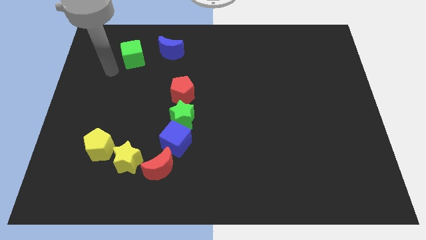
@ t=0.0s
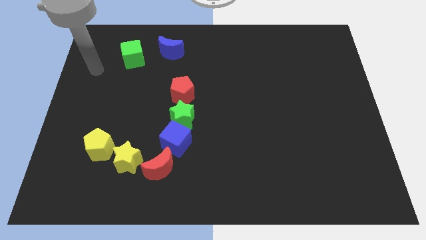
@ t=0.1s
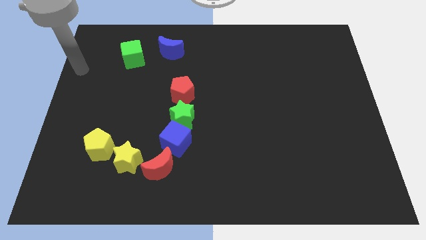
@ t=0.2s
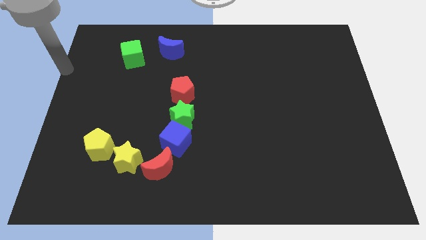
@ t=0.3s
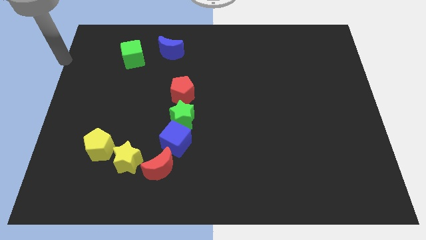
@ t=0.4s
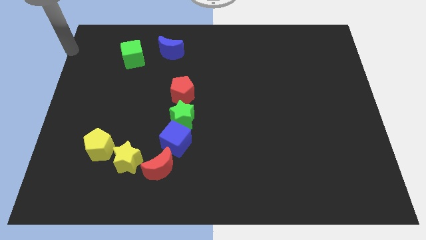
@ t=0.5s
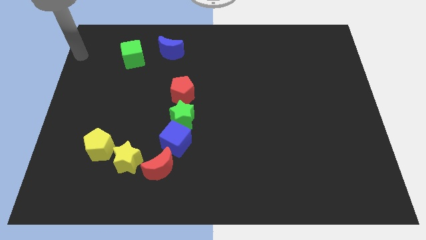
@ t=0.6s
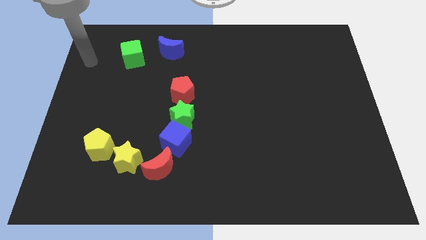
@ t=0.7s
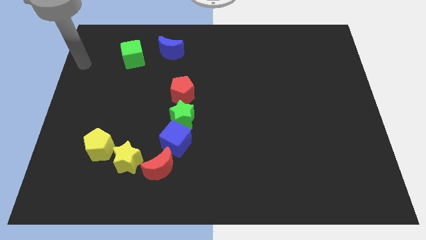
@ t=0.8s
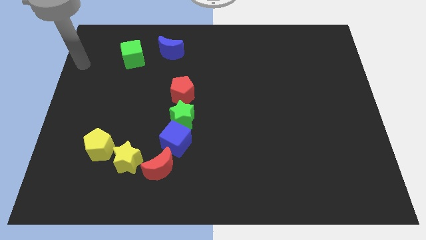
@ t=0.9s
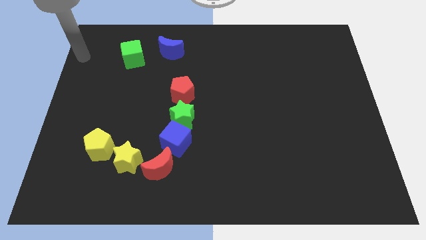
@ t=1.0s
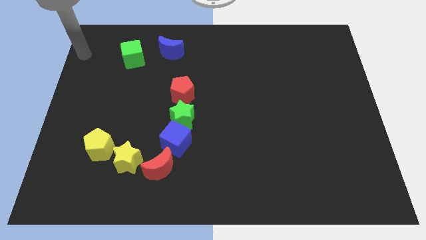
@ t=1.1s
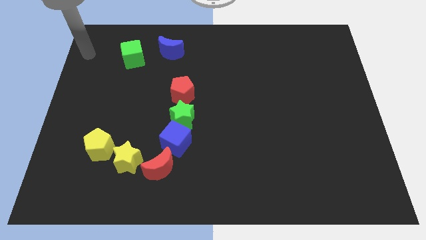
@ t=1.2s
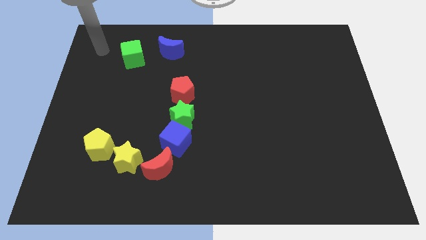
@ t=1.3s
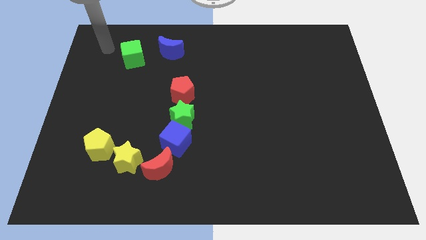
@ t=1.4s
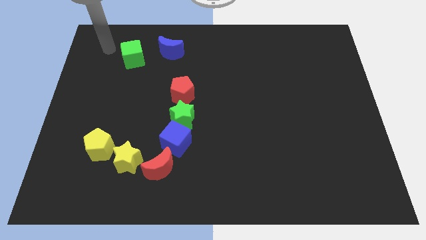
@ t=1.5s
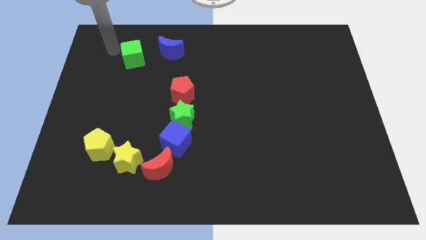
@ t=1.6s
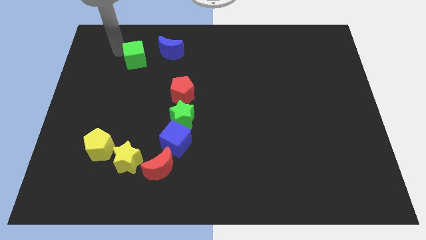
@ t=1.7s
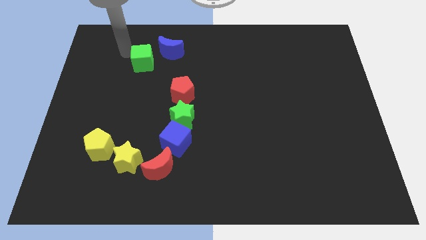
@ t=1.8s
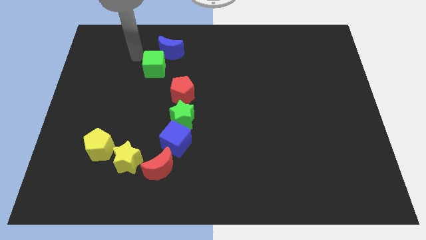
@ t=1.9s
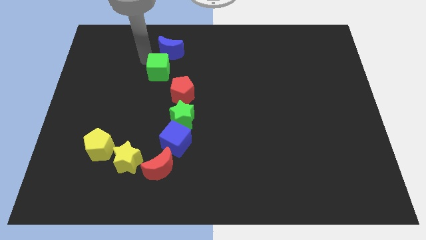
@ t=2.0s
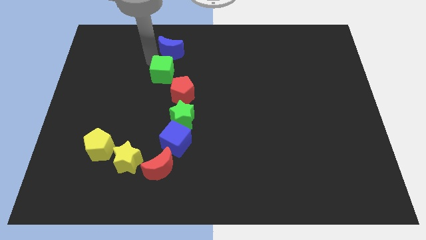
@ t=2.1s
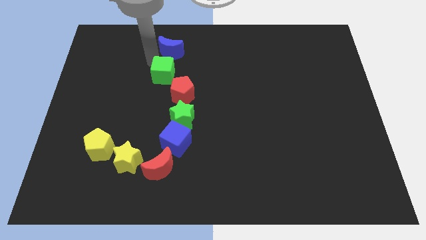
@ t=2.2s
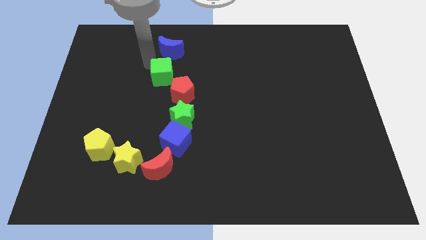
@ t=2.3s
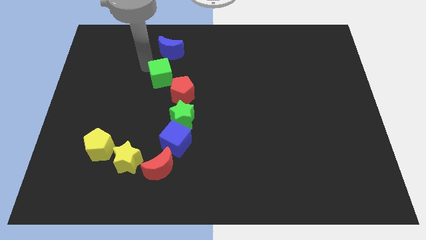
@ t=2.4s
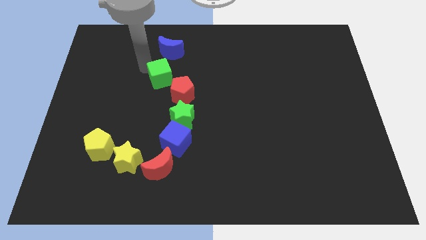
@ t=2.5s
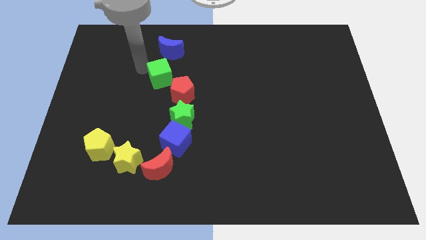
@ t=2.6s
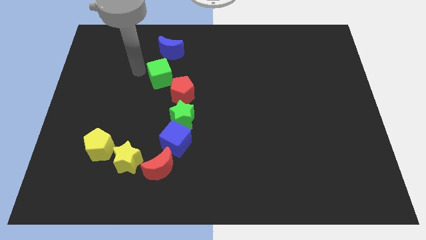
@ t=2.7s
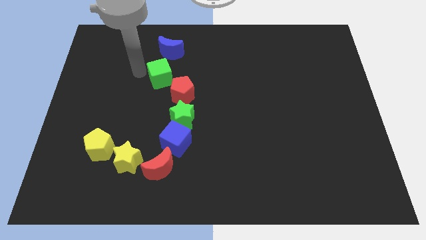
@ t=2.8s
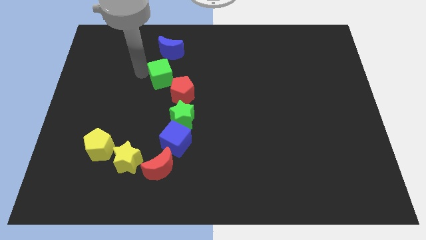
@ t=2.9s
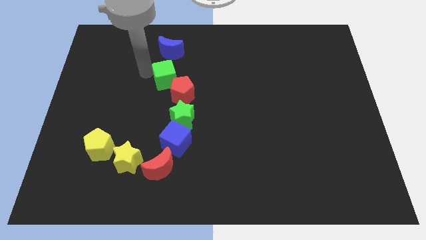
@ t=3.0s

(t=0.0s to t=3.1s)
push the green cube towards red pentagon

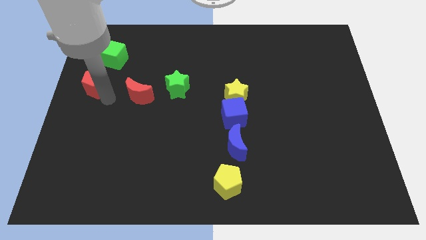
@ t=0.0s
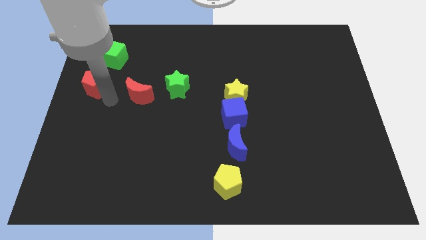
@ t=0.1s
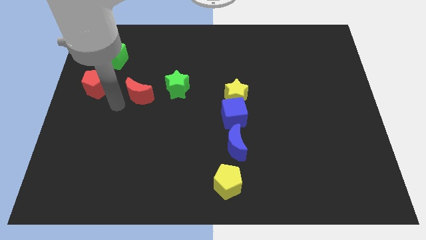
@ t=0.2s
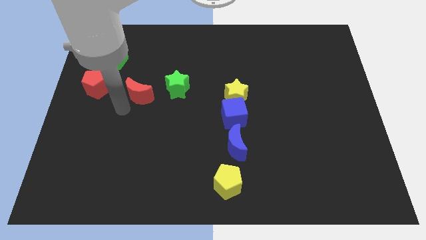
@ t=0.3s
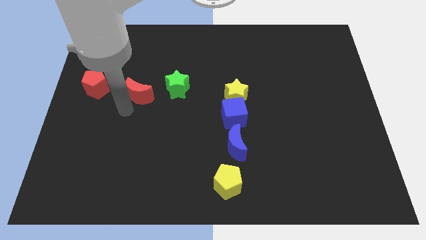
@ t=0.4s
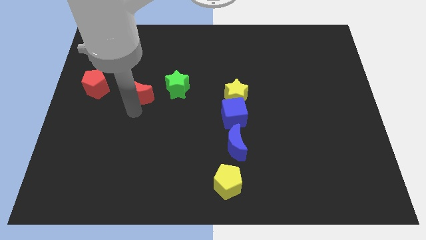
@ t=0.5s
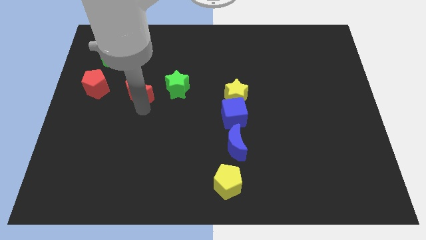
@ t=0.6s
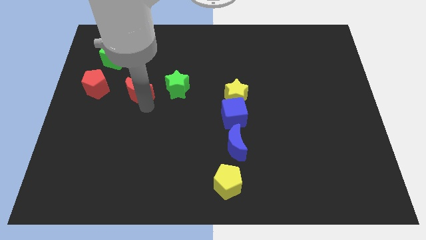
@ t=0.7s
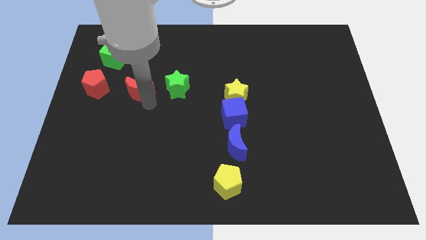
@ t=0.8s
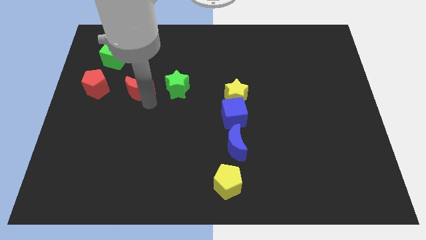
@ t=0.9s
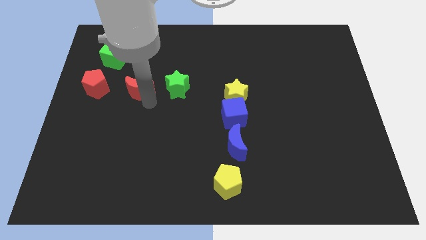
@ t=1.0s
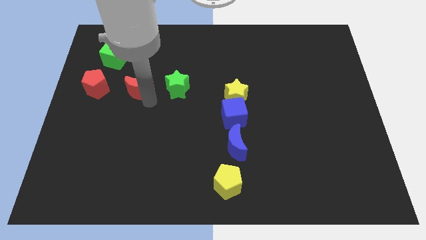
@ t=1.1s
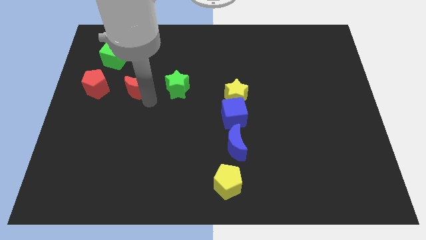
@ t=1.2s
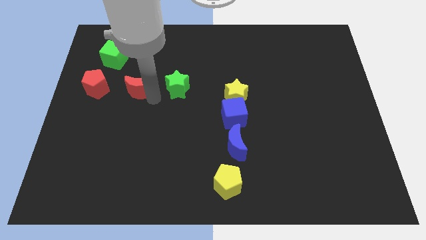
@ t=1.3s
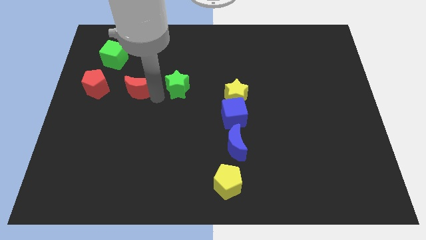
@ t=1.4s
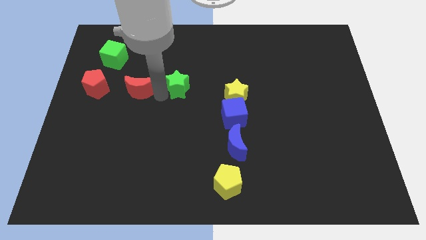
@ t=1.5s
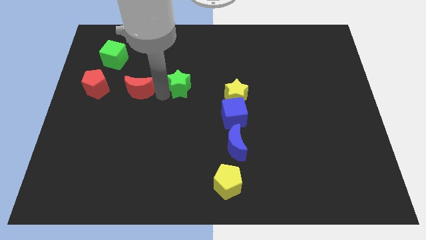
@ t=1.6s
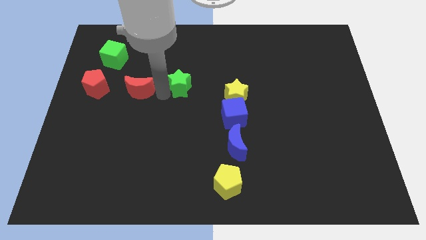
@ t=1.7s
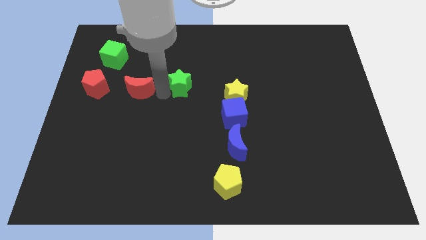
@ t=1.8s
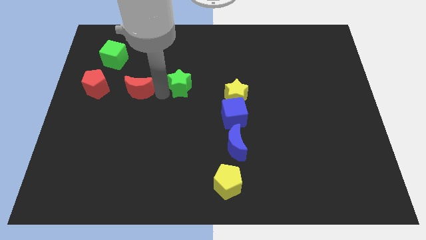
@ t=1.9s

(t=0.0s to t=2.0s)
move the red moon slightly to the left

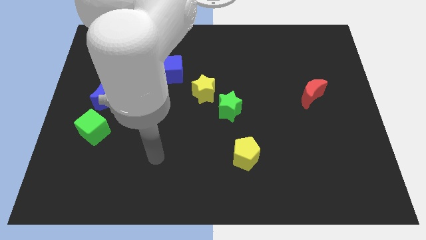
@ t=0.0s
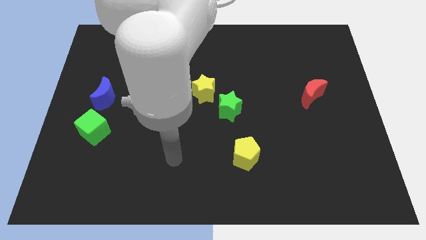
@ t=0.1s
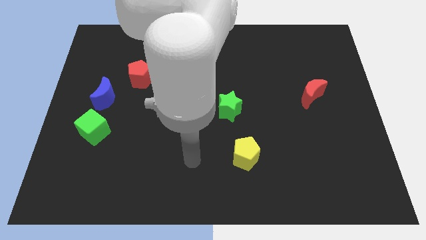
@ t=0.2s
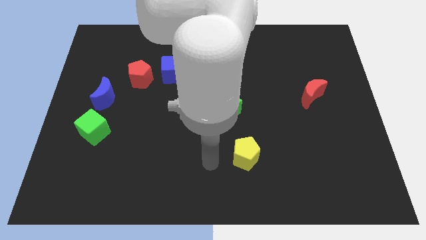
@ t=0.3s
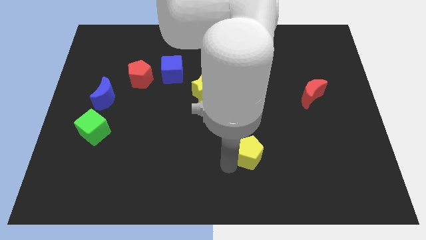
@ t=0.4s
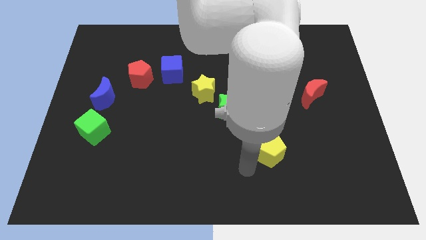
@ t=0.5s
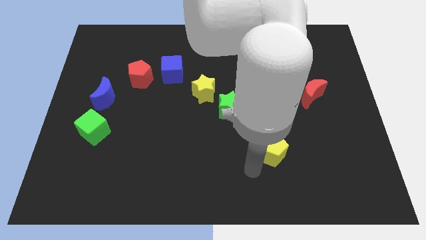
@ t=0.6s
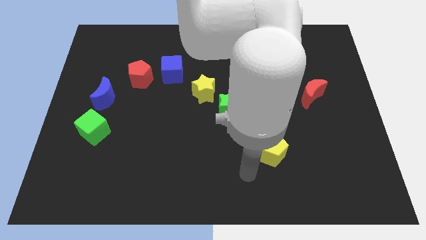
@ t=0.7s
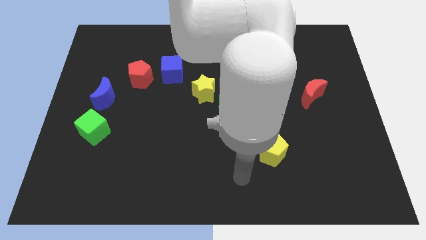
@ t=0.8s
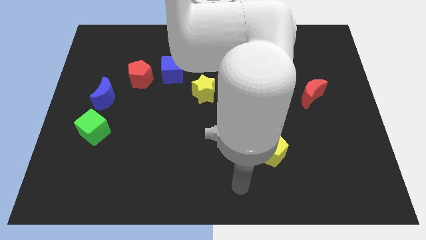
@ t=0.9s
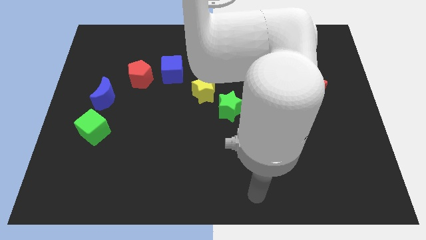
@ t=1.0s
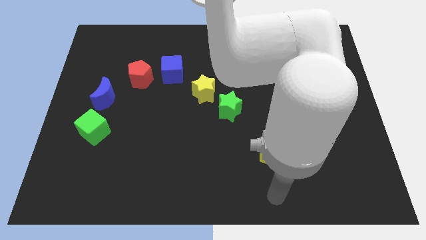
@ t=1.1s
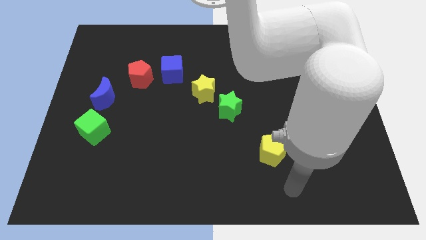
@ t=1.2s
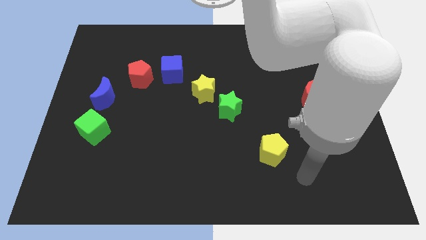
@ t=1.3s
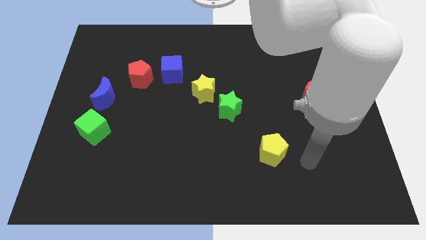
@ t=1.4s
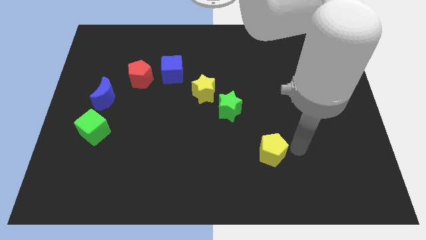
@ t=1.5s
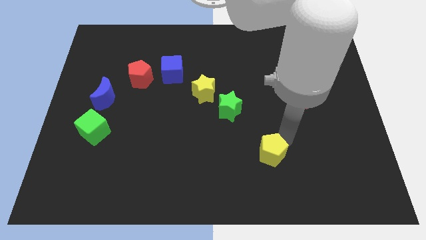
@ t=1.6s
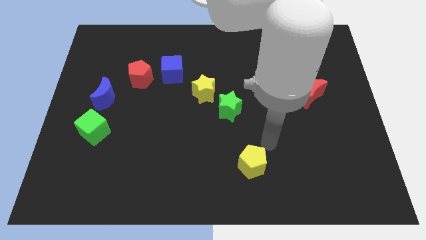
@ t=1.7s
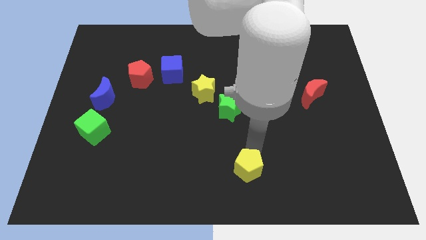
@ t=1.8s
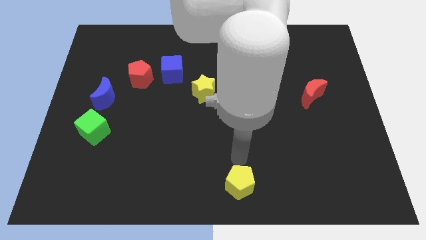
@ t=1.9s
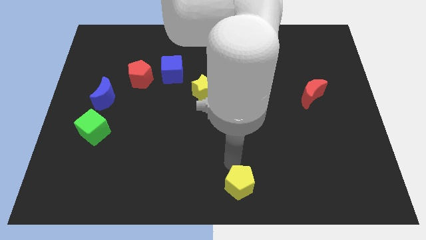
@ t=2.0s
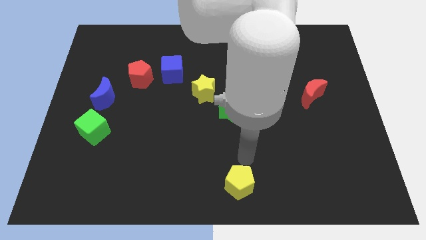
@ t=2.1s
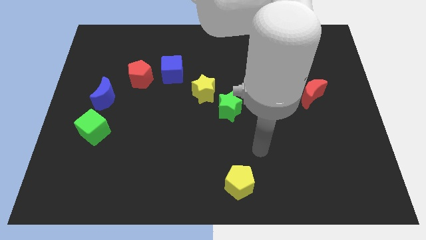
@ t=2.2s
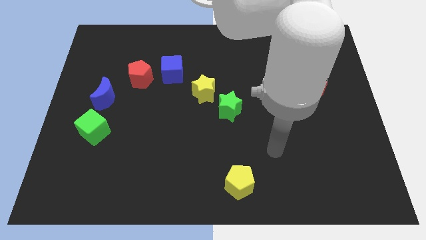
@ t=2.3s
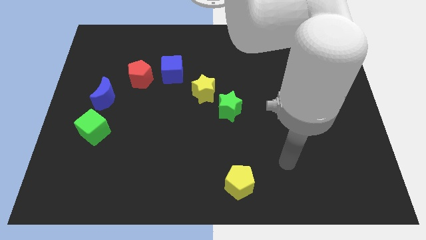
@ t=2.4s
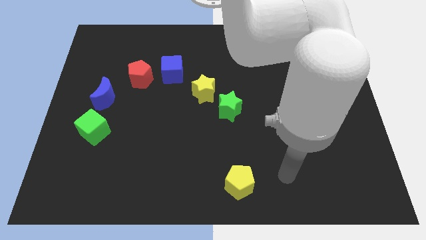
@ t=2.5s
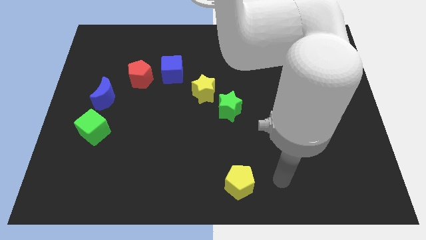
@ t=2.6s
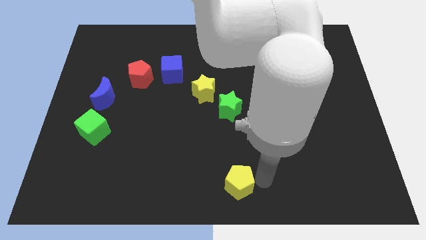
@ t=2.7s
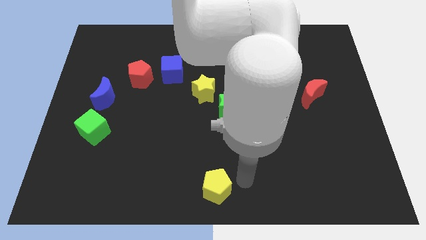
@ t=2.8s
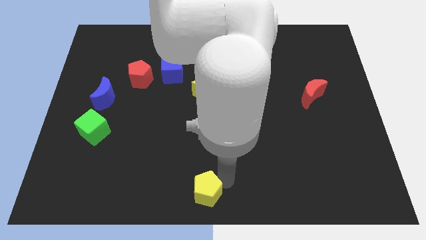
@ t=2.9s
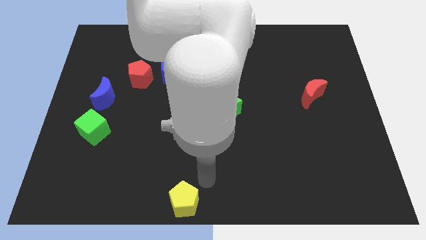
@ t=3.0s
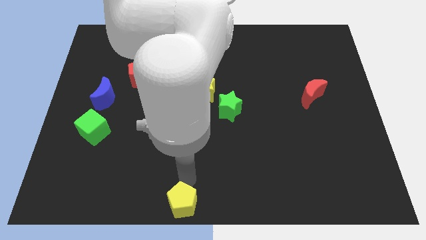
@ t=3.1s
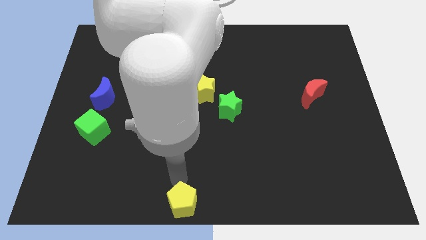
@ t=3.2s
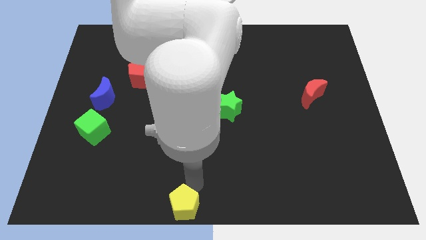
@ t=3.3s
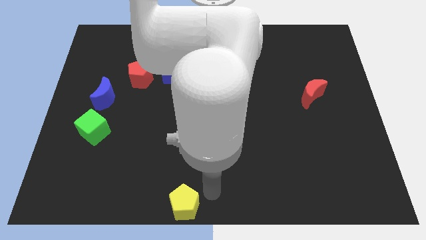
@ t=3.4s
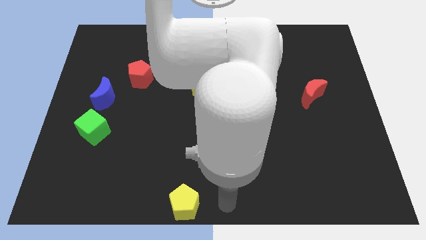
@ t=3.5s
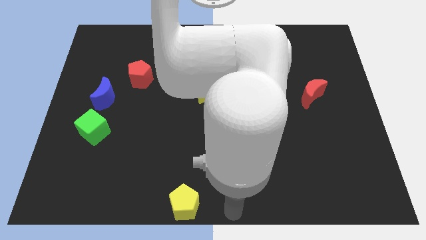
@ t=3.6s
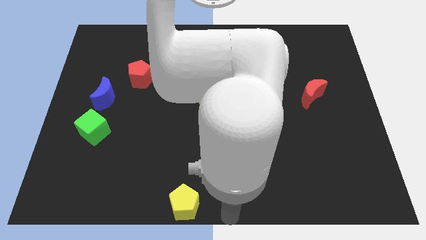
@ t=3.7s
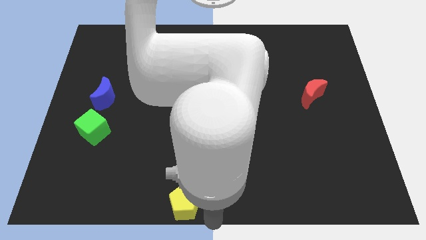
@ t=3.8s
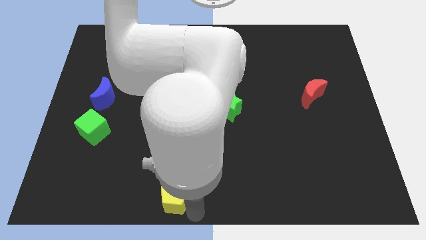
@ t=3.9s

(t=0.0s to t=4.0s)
push the yellow pentagon to the bottom center of the board
